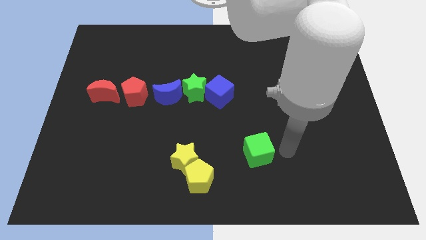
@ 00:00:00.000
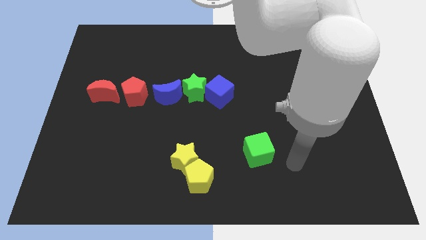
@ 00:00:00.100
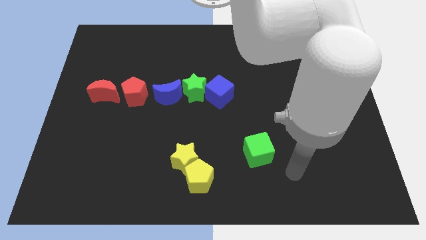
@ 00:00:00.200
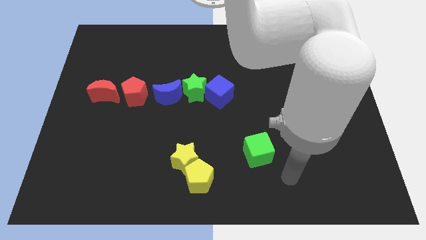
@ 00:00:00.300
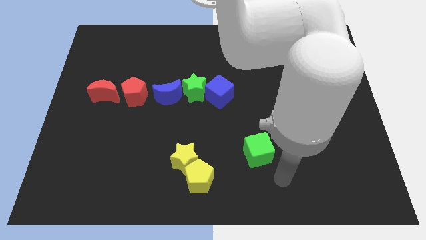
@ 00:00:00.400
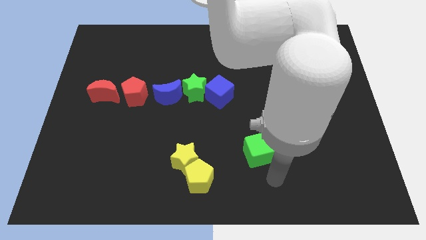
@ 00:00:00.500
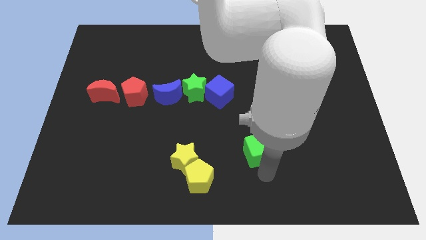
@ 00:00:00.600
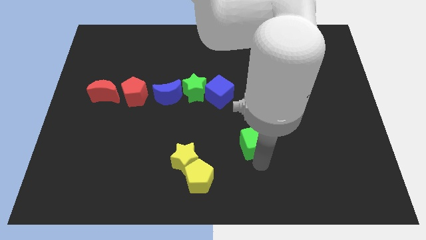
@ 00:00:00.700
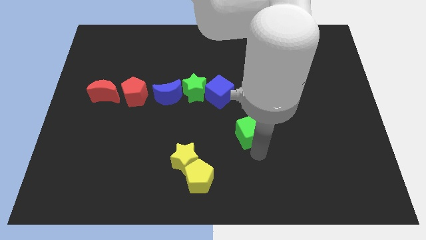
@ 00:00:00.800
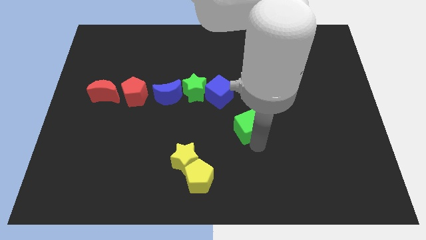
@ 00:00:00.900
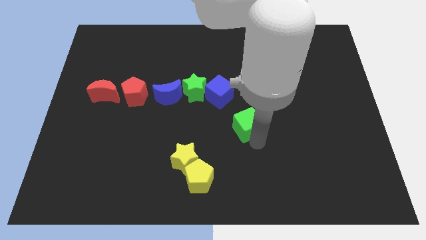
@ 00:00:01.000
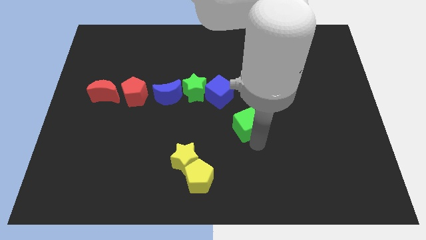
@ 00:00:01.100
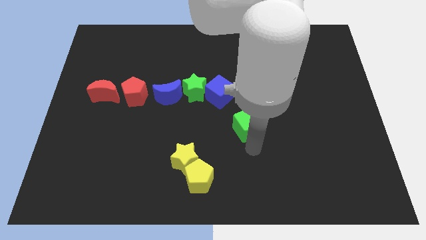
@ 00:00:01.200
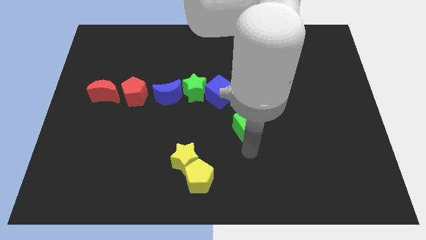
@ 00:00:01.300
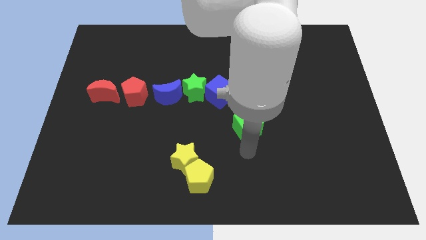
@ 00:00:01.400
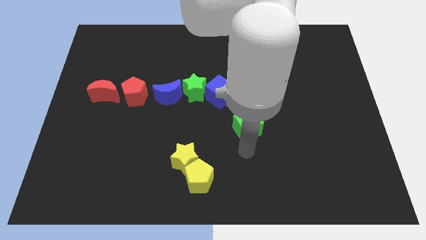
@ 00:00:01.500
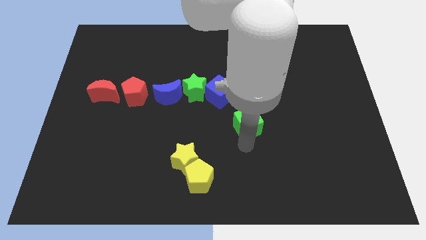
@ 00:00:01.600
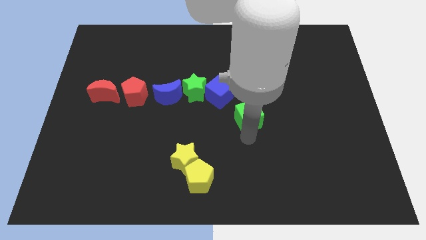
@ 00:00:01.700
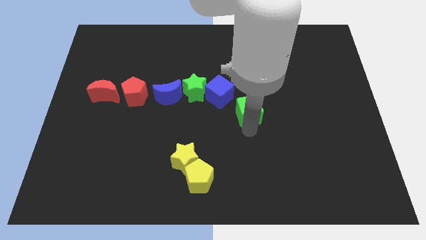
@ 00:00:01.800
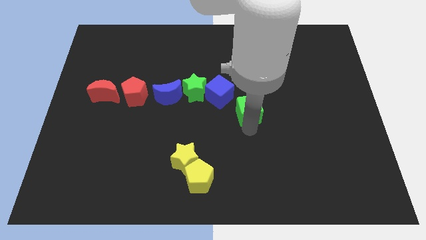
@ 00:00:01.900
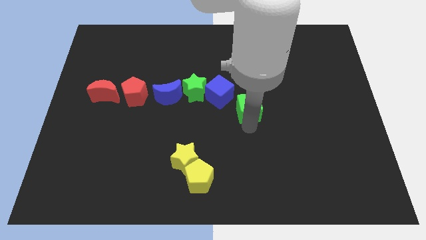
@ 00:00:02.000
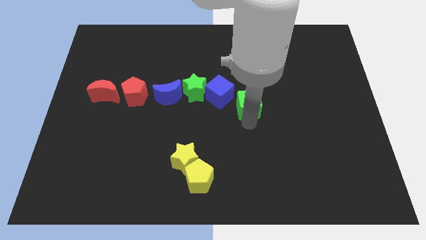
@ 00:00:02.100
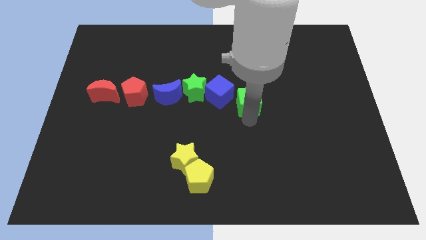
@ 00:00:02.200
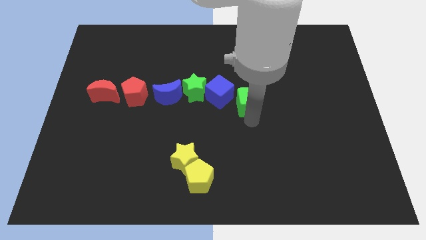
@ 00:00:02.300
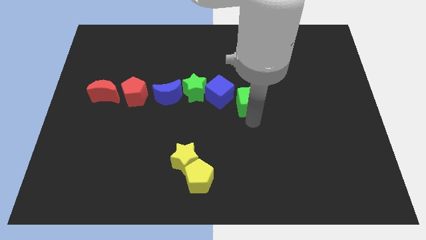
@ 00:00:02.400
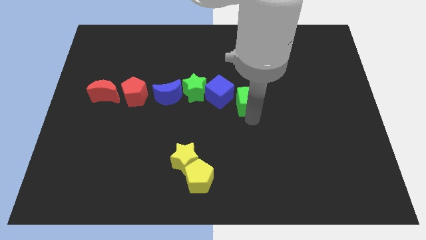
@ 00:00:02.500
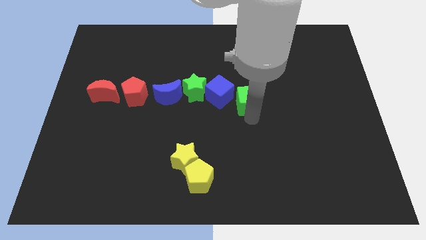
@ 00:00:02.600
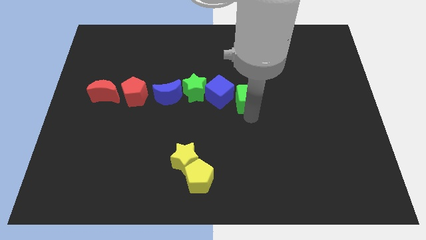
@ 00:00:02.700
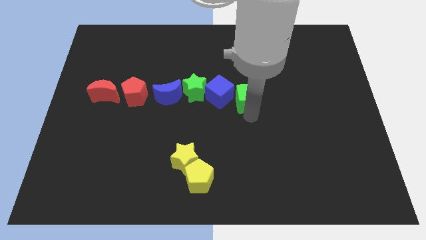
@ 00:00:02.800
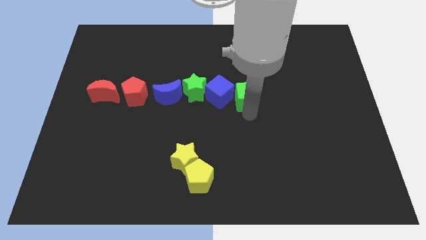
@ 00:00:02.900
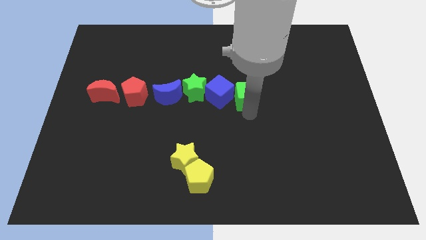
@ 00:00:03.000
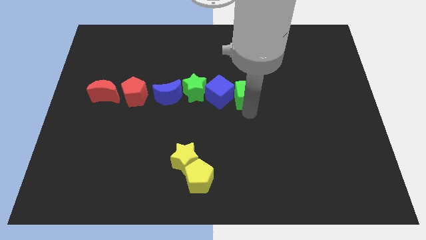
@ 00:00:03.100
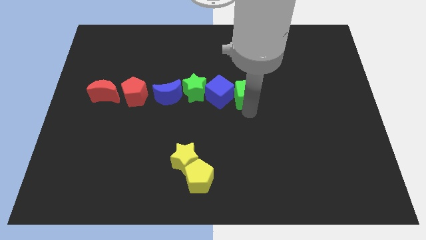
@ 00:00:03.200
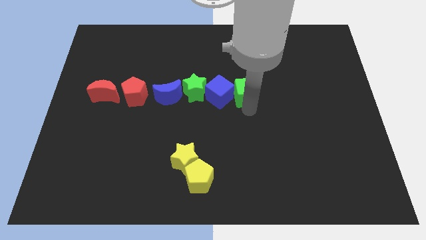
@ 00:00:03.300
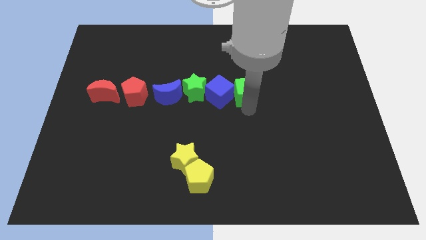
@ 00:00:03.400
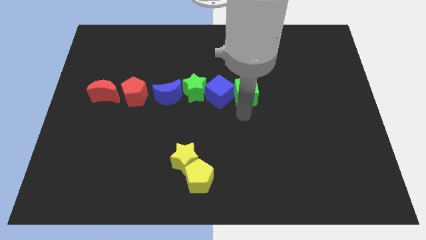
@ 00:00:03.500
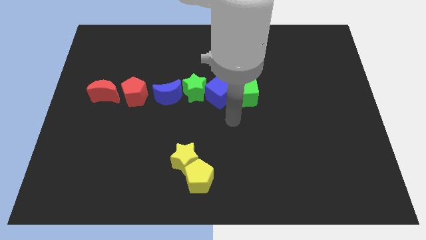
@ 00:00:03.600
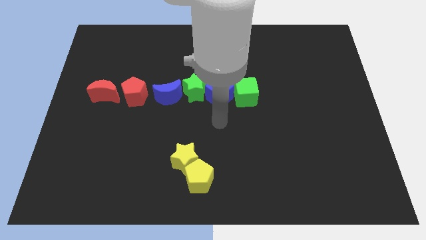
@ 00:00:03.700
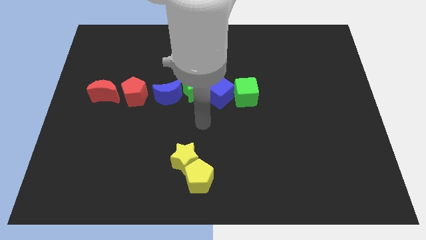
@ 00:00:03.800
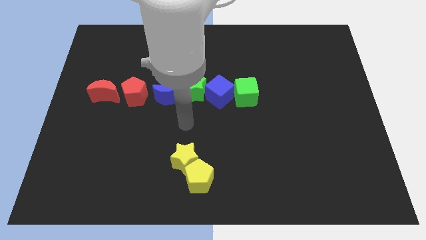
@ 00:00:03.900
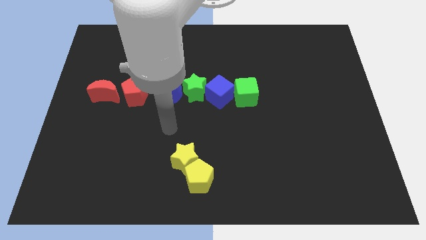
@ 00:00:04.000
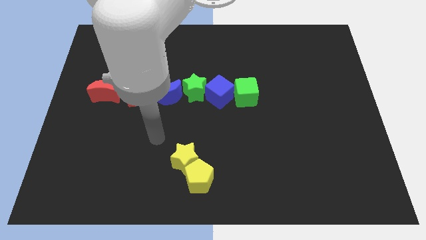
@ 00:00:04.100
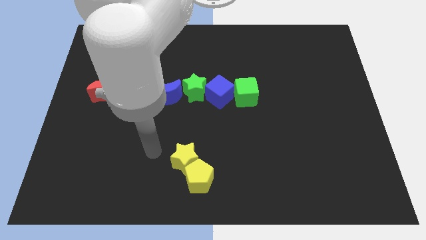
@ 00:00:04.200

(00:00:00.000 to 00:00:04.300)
move green cube to the top of the board

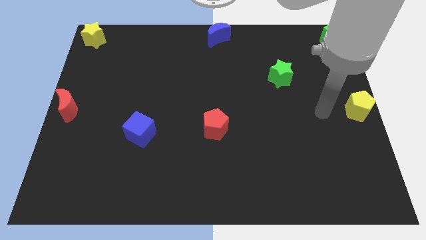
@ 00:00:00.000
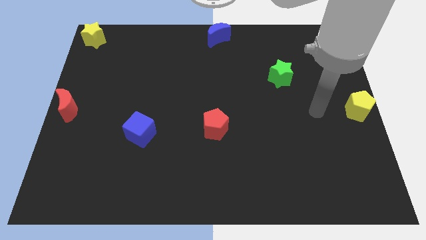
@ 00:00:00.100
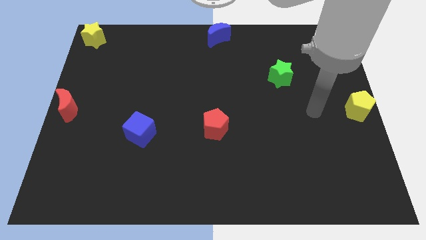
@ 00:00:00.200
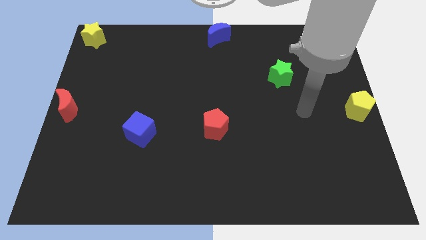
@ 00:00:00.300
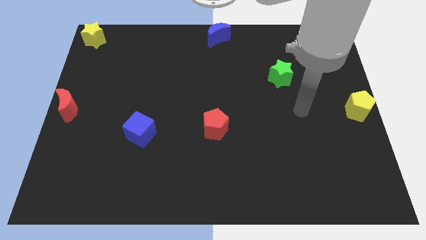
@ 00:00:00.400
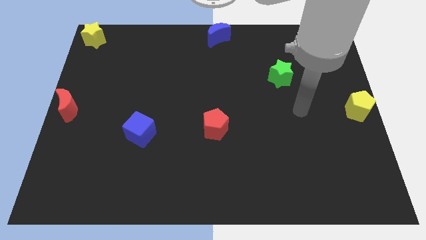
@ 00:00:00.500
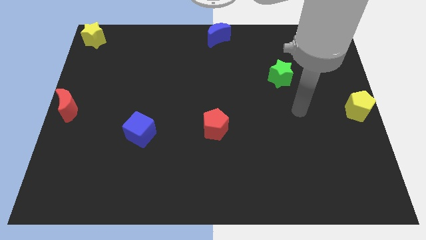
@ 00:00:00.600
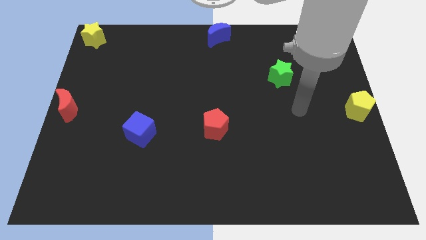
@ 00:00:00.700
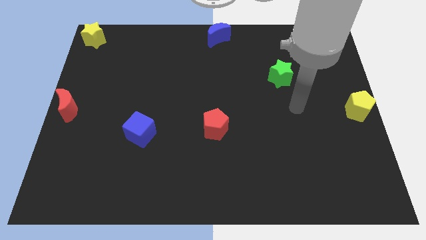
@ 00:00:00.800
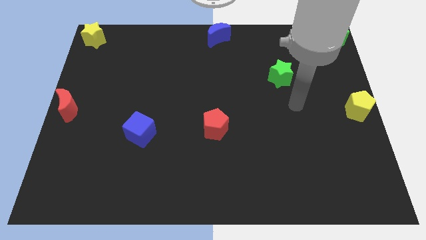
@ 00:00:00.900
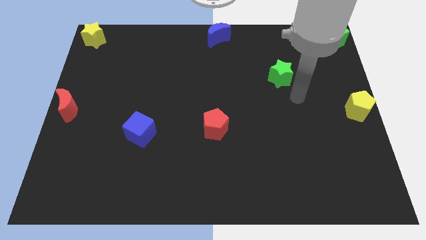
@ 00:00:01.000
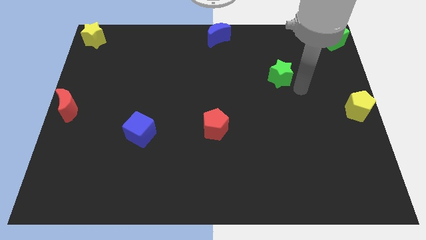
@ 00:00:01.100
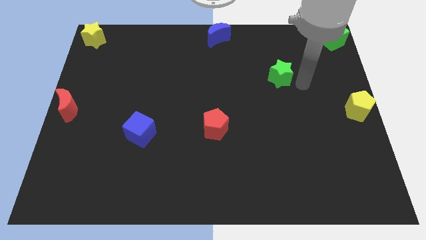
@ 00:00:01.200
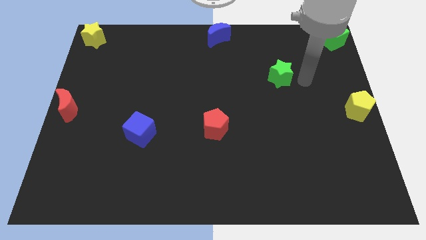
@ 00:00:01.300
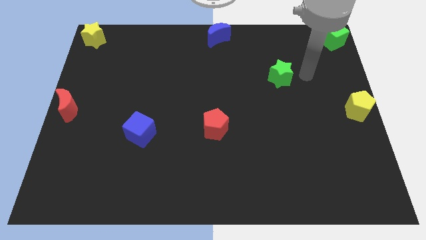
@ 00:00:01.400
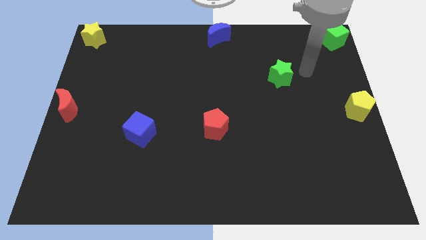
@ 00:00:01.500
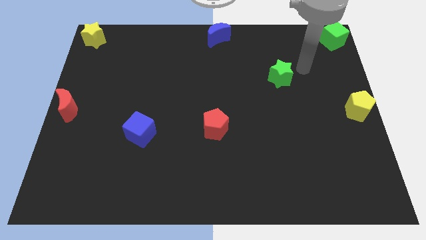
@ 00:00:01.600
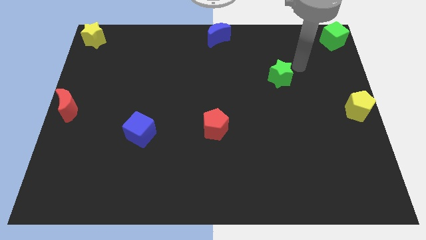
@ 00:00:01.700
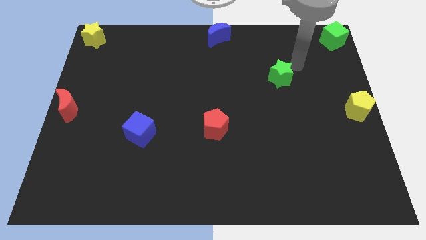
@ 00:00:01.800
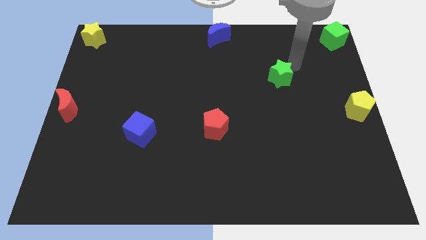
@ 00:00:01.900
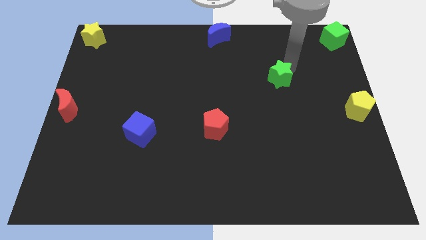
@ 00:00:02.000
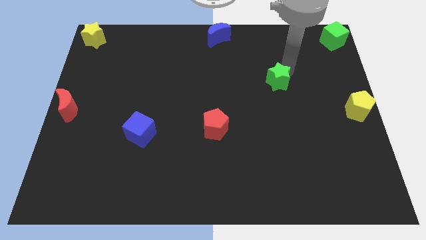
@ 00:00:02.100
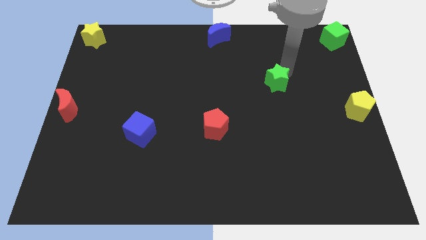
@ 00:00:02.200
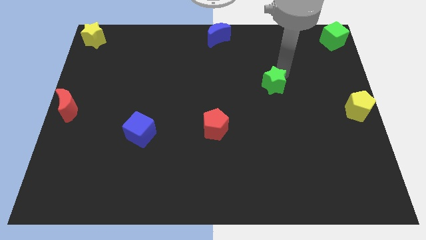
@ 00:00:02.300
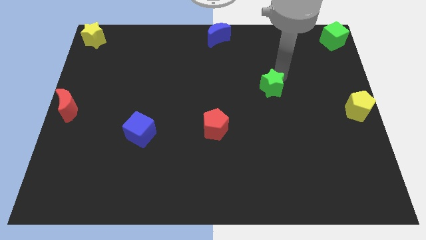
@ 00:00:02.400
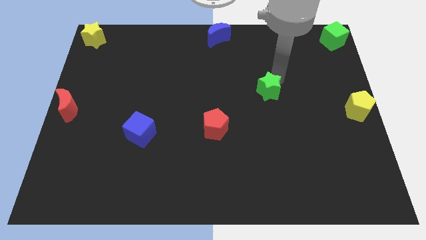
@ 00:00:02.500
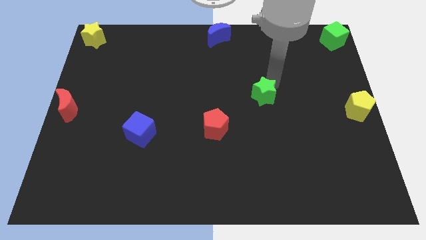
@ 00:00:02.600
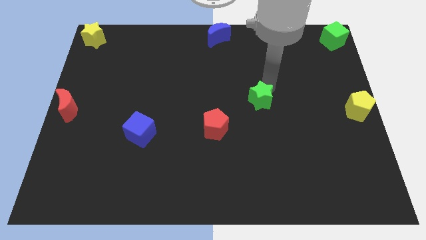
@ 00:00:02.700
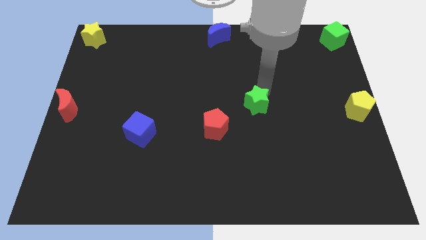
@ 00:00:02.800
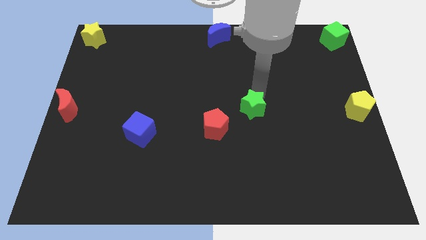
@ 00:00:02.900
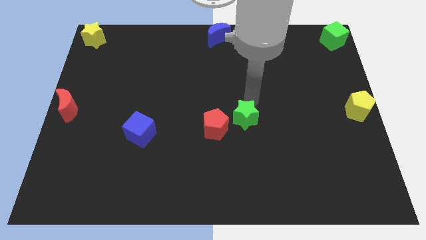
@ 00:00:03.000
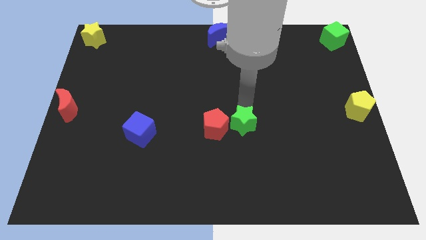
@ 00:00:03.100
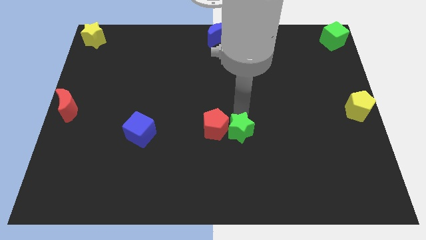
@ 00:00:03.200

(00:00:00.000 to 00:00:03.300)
push the green star to the right side of the red pentagon

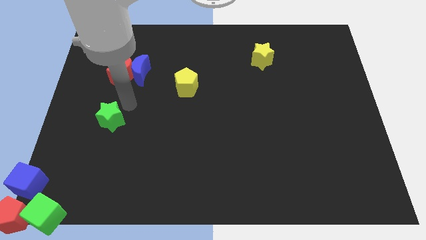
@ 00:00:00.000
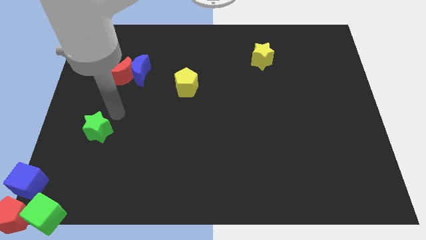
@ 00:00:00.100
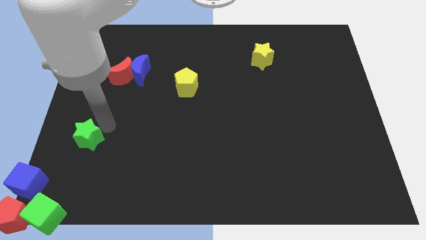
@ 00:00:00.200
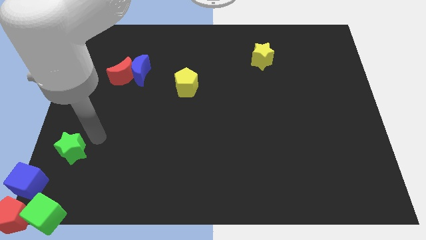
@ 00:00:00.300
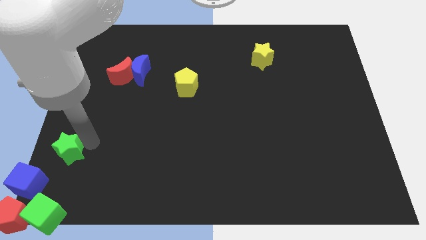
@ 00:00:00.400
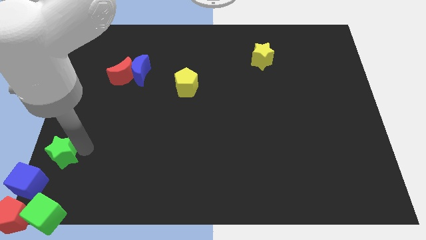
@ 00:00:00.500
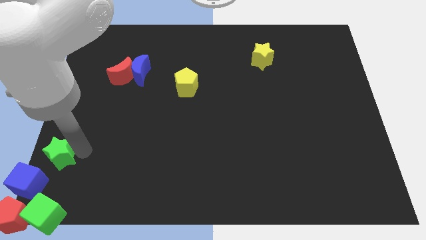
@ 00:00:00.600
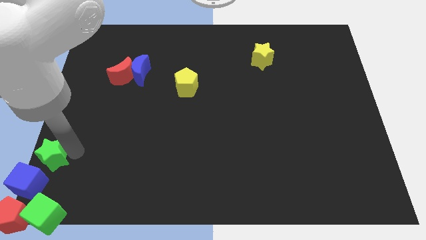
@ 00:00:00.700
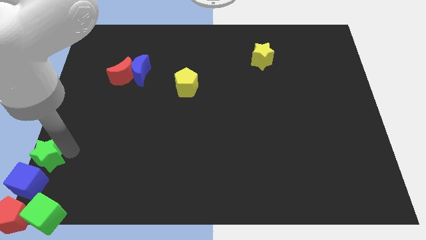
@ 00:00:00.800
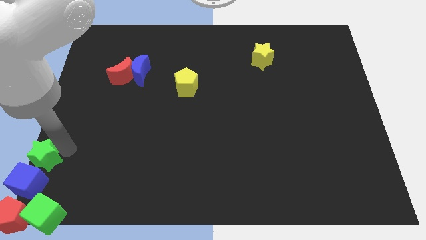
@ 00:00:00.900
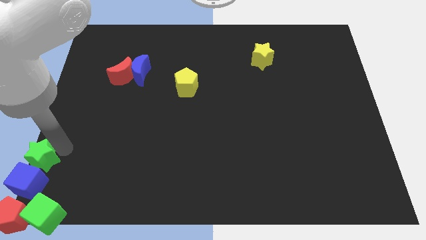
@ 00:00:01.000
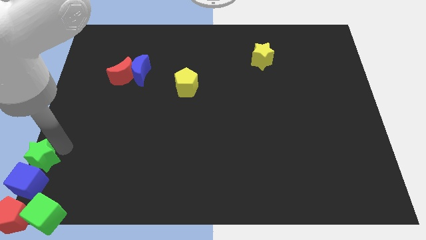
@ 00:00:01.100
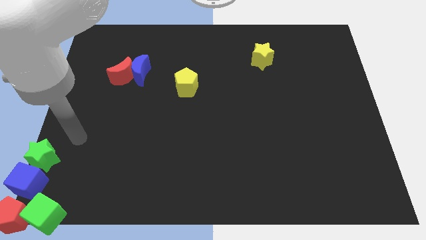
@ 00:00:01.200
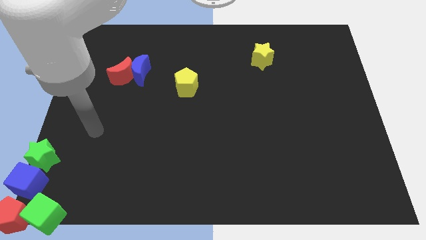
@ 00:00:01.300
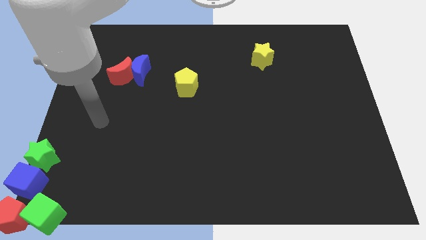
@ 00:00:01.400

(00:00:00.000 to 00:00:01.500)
move the green star above to the blue cube
